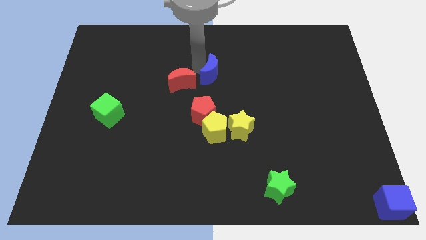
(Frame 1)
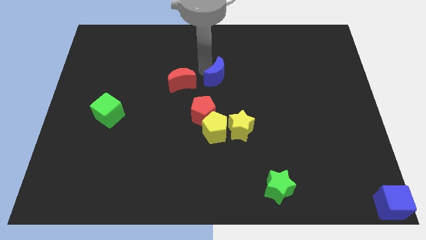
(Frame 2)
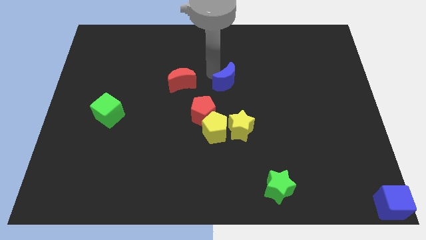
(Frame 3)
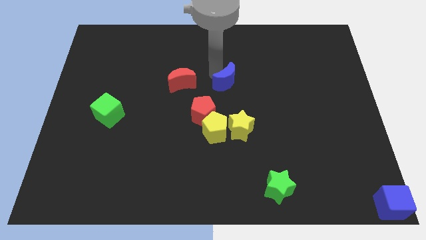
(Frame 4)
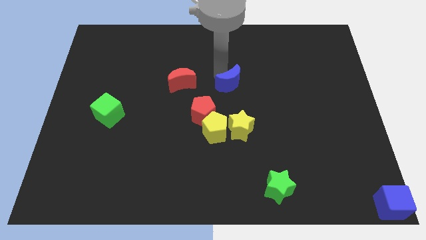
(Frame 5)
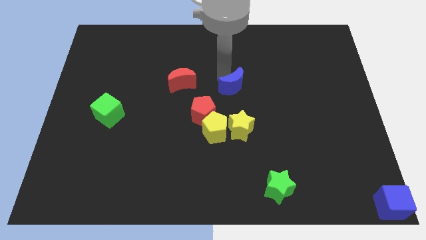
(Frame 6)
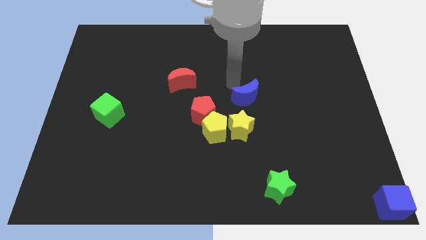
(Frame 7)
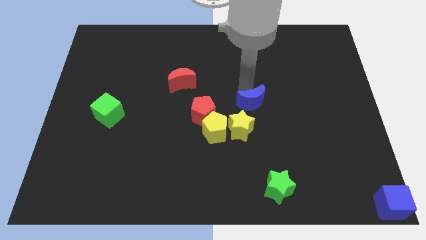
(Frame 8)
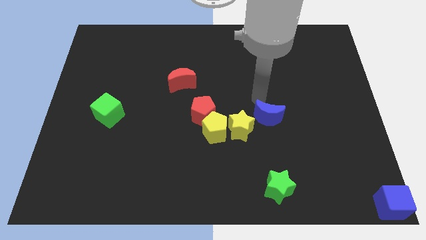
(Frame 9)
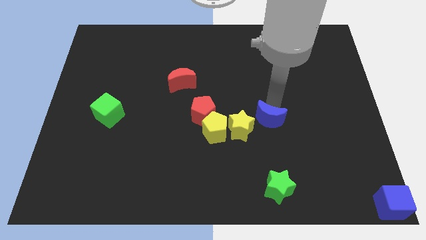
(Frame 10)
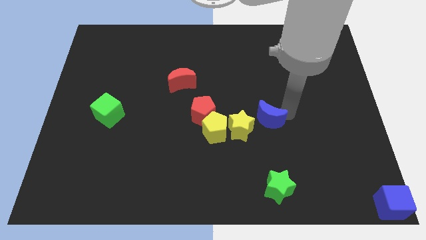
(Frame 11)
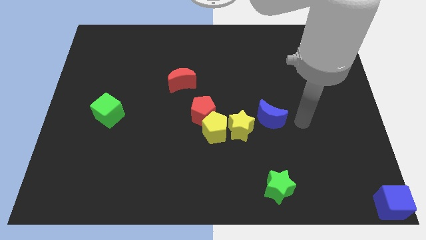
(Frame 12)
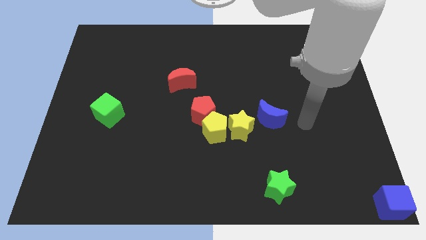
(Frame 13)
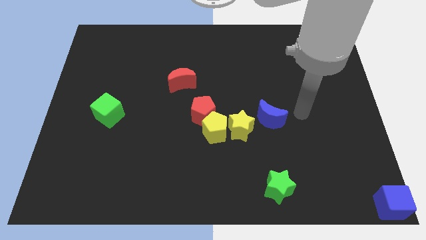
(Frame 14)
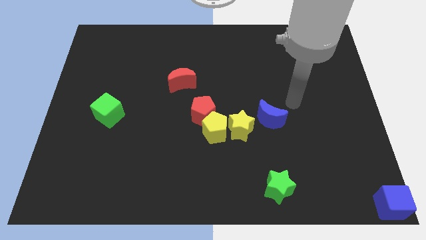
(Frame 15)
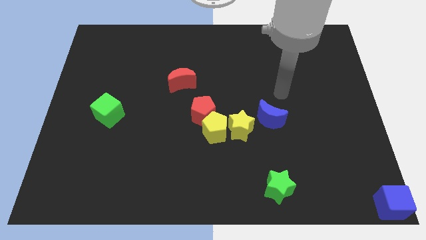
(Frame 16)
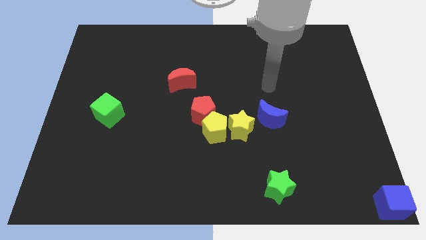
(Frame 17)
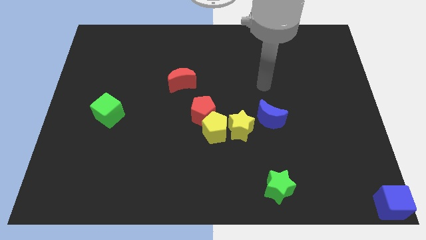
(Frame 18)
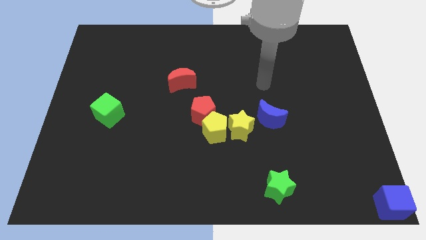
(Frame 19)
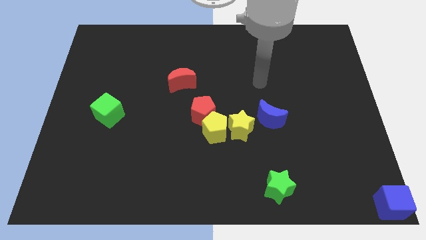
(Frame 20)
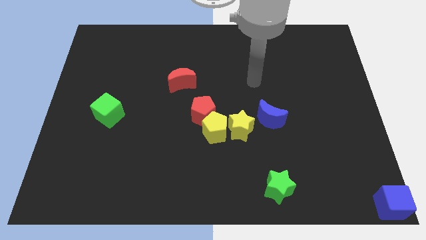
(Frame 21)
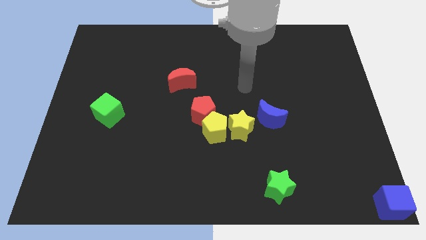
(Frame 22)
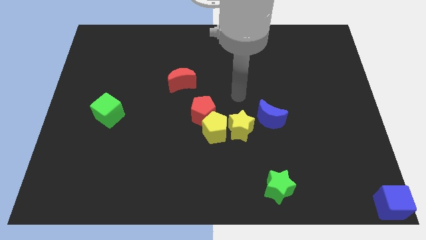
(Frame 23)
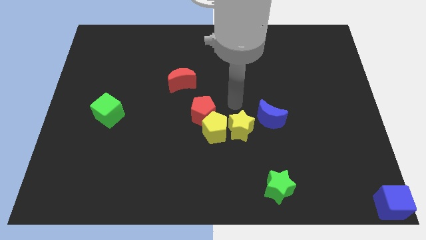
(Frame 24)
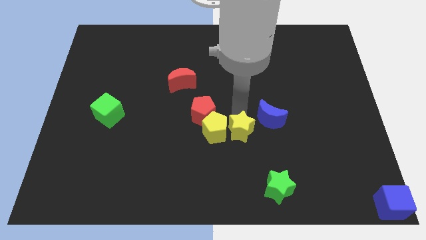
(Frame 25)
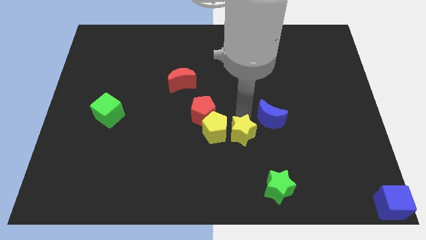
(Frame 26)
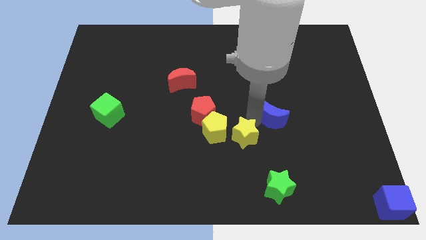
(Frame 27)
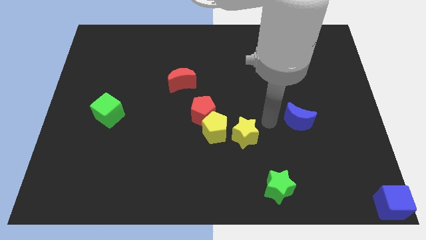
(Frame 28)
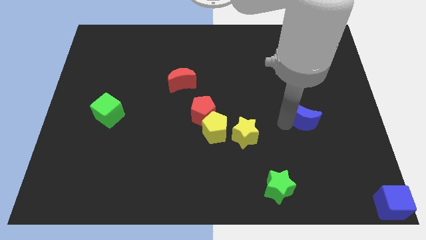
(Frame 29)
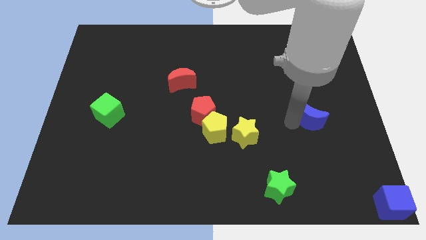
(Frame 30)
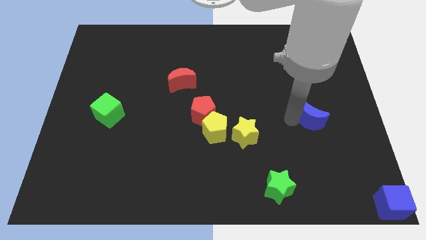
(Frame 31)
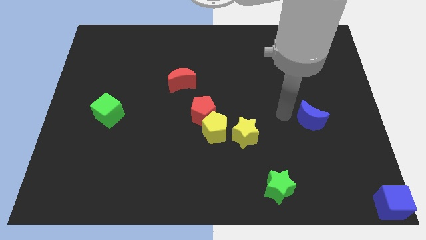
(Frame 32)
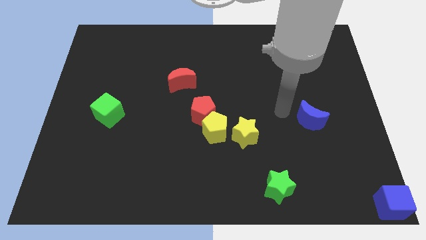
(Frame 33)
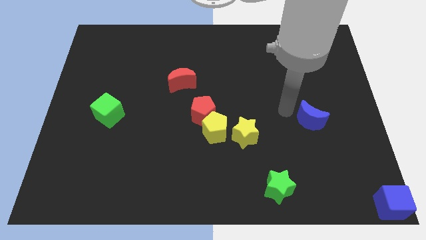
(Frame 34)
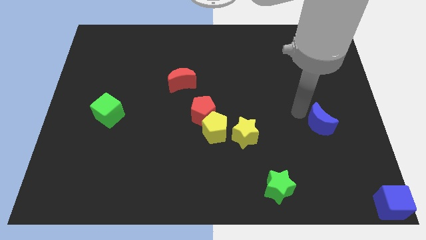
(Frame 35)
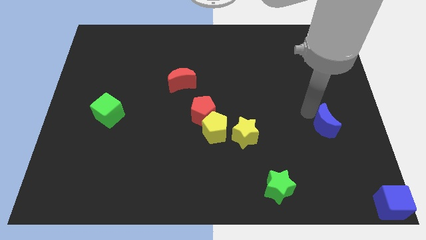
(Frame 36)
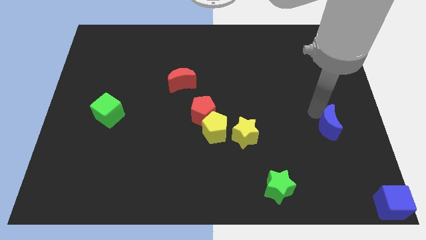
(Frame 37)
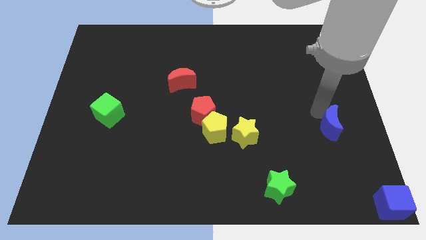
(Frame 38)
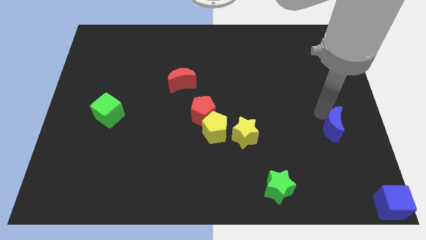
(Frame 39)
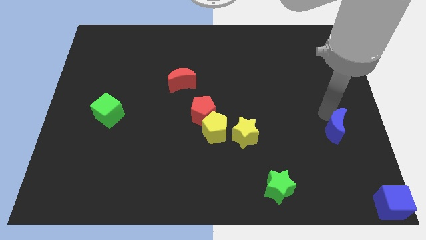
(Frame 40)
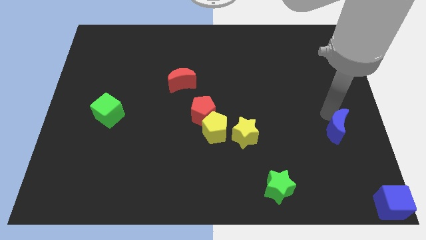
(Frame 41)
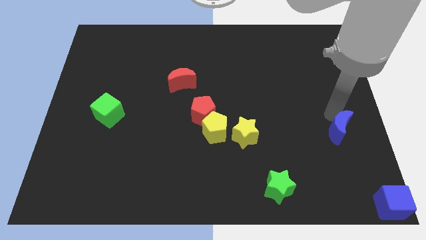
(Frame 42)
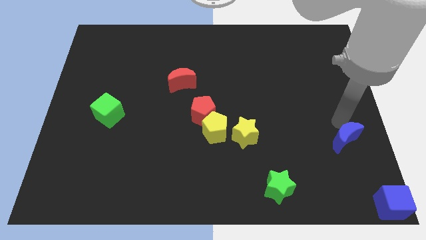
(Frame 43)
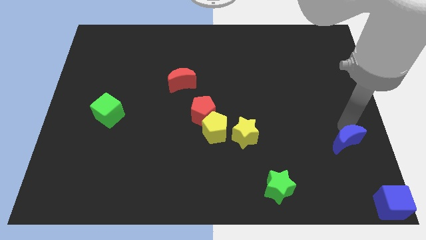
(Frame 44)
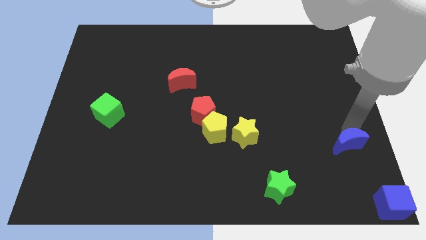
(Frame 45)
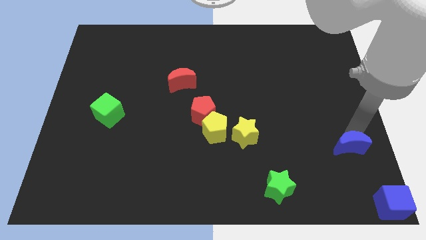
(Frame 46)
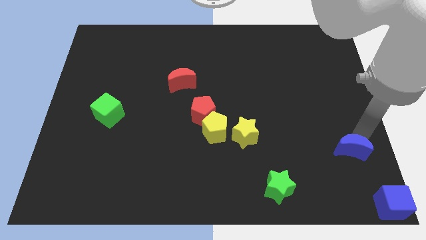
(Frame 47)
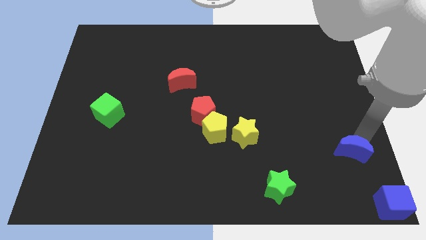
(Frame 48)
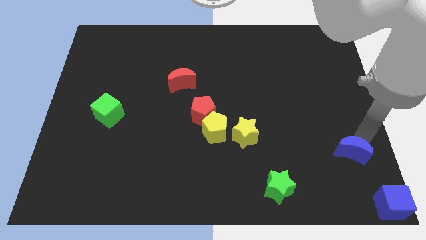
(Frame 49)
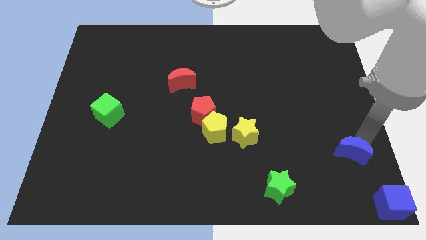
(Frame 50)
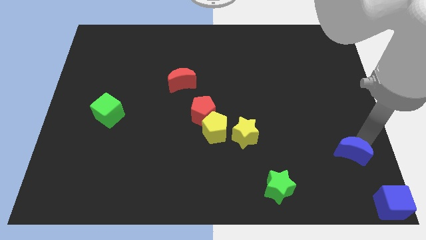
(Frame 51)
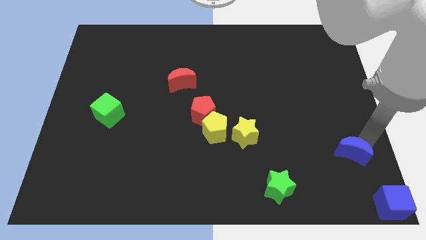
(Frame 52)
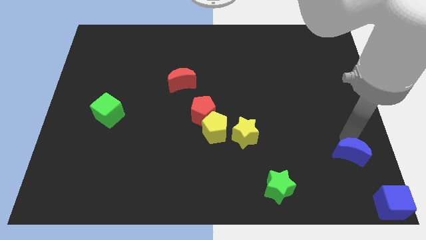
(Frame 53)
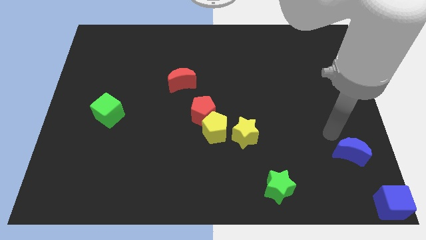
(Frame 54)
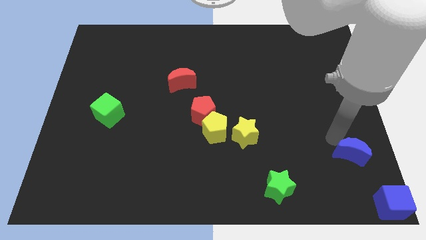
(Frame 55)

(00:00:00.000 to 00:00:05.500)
separate blue moon from red moon

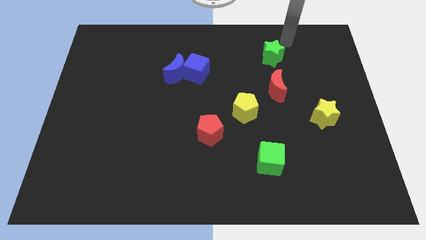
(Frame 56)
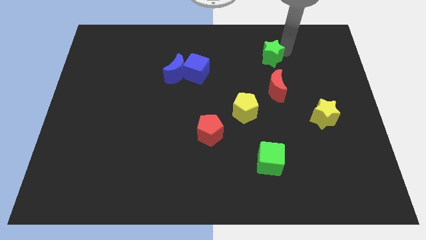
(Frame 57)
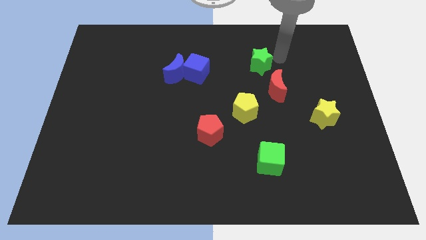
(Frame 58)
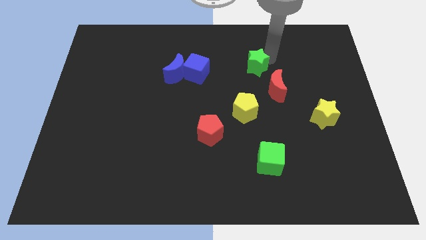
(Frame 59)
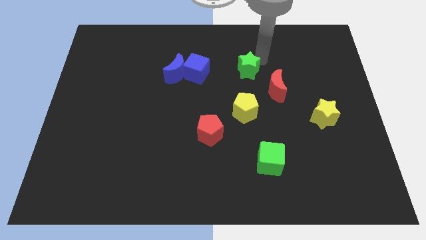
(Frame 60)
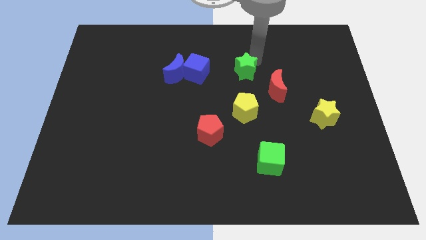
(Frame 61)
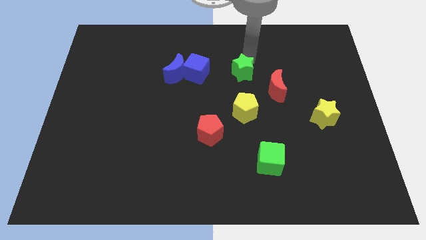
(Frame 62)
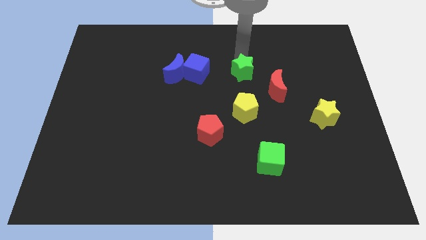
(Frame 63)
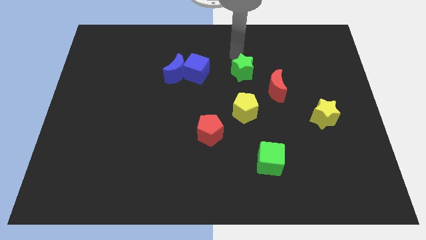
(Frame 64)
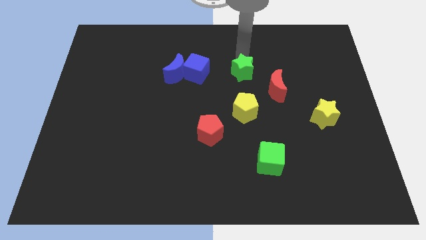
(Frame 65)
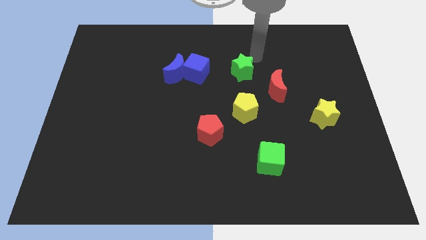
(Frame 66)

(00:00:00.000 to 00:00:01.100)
place the green star to the right of the blue cube

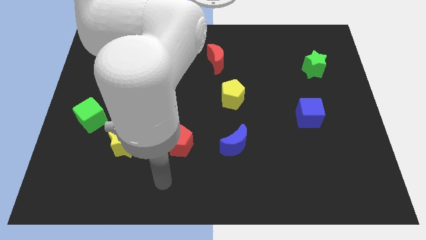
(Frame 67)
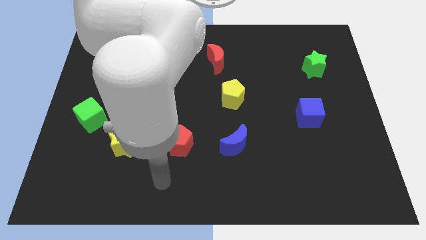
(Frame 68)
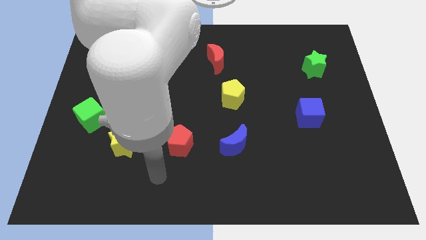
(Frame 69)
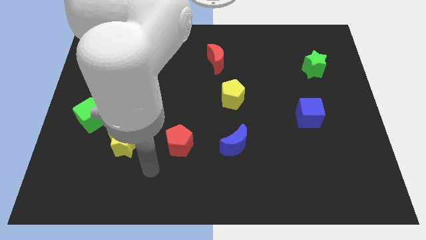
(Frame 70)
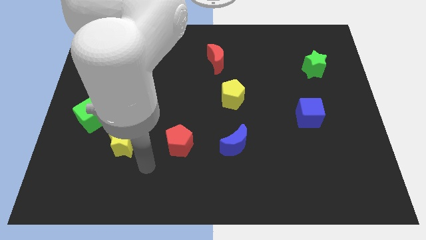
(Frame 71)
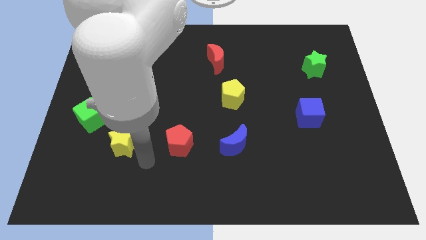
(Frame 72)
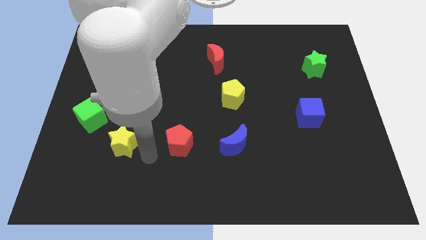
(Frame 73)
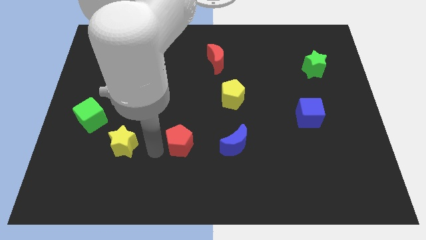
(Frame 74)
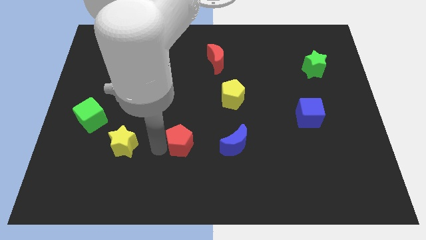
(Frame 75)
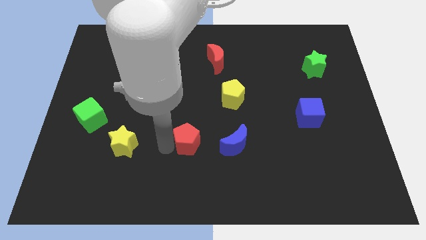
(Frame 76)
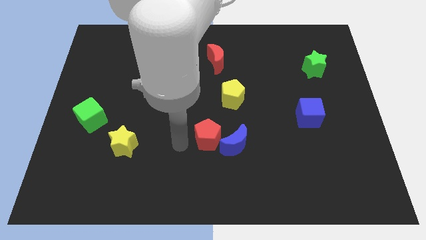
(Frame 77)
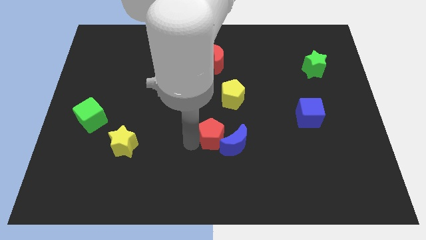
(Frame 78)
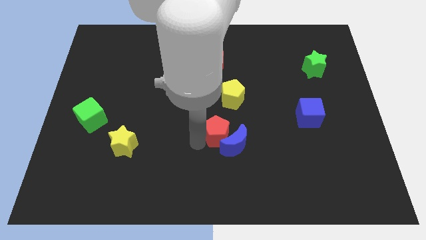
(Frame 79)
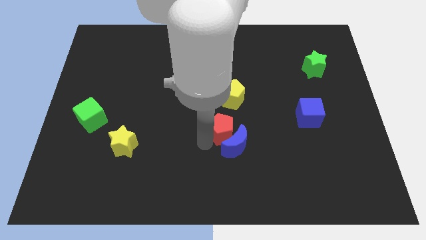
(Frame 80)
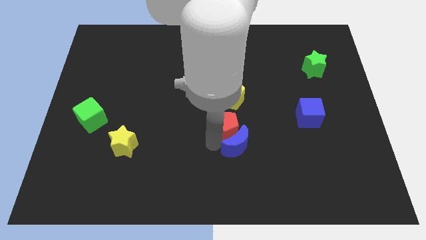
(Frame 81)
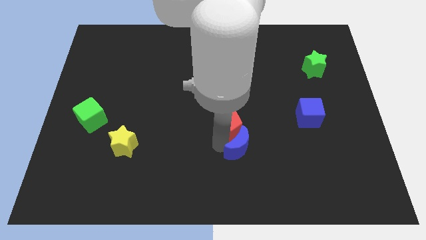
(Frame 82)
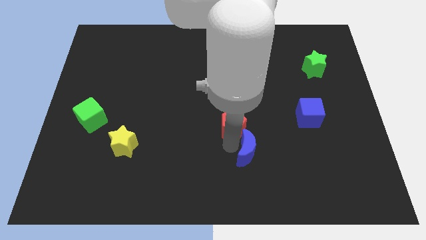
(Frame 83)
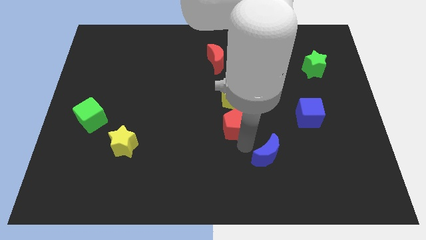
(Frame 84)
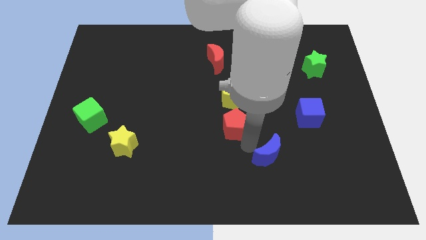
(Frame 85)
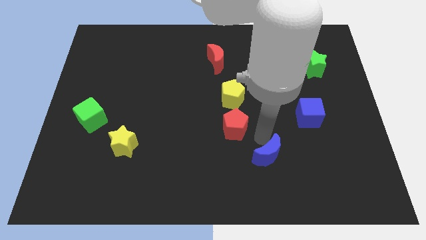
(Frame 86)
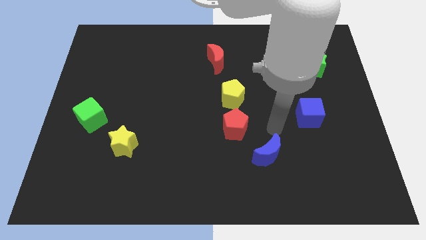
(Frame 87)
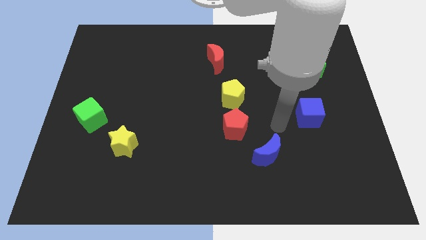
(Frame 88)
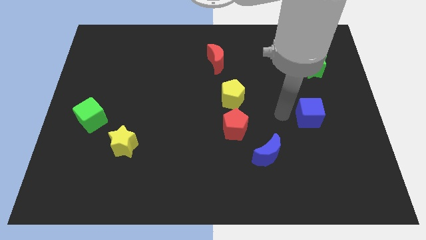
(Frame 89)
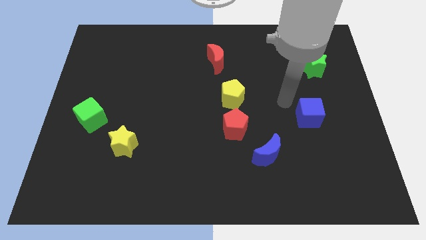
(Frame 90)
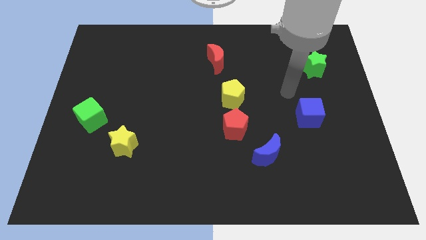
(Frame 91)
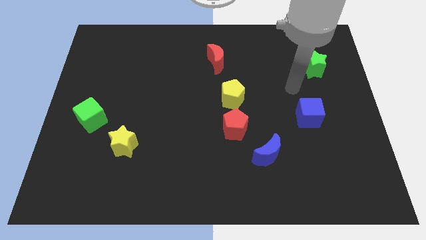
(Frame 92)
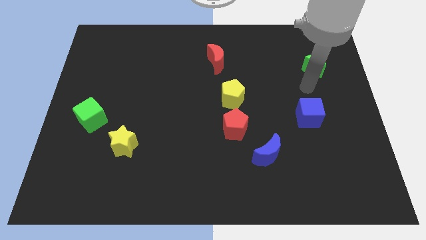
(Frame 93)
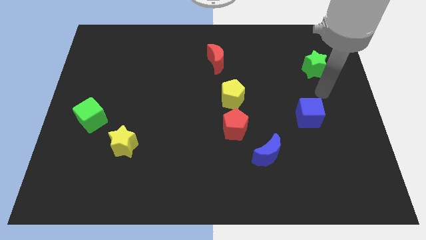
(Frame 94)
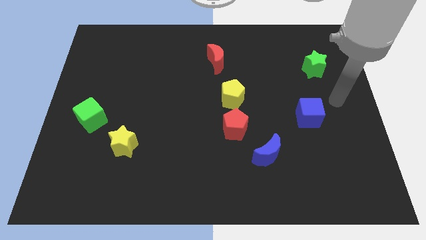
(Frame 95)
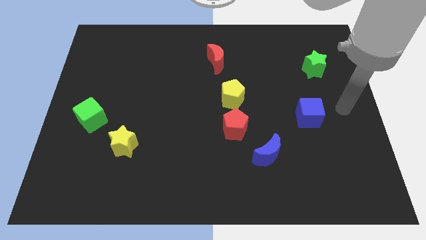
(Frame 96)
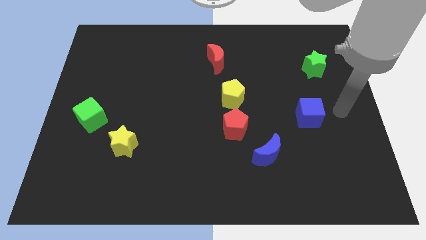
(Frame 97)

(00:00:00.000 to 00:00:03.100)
push the red pentagon to the bottom side of the yellow pentagon
